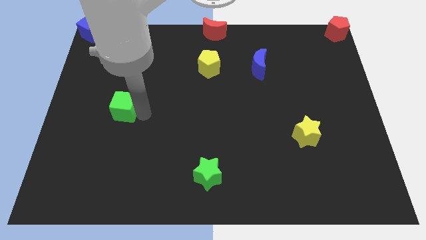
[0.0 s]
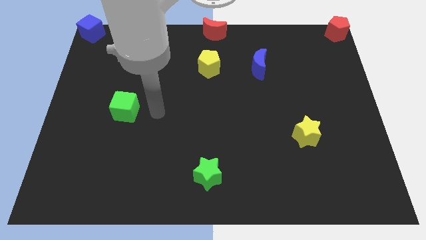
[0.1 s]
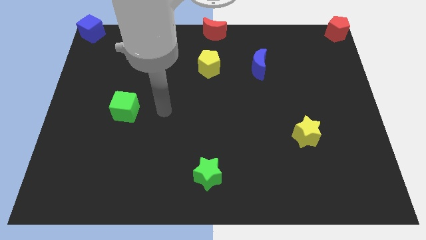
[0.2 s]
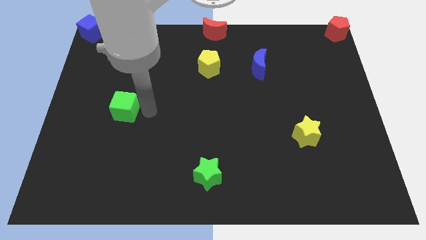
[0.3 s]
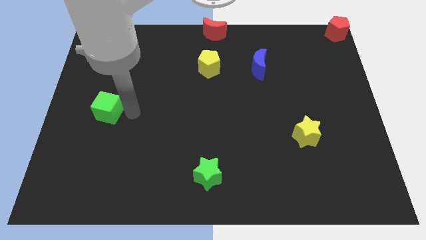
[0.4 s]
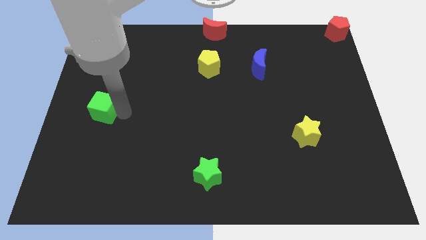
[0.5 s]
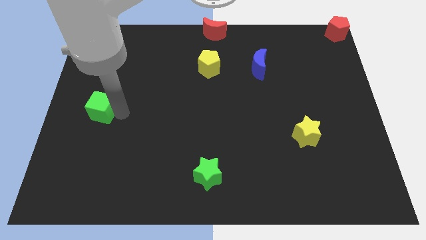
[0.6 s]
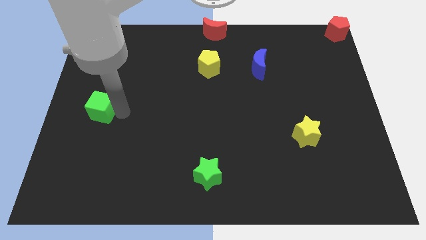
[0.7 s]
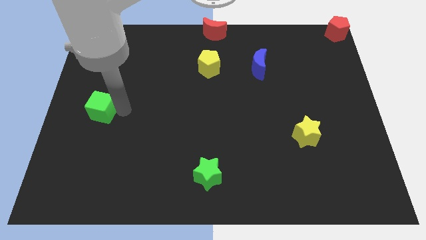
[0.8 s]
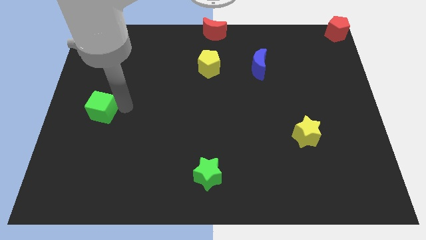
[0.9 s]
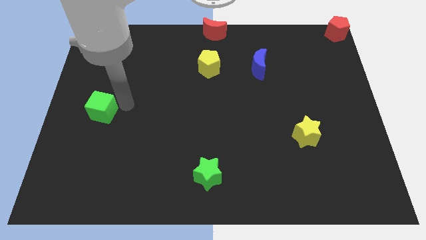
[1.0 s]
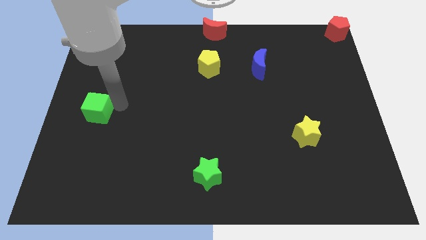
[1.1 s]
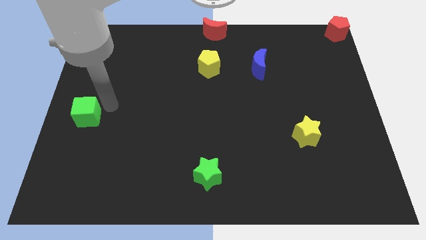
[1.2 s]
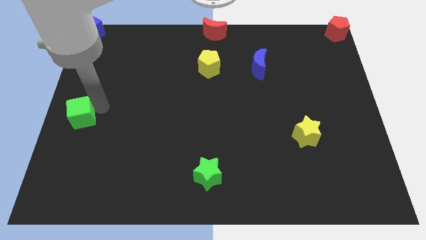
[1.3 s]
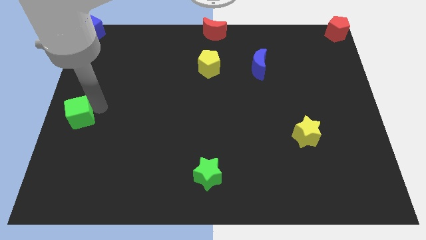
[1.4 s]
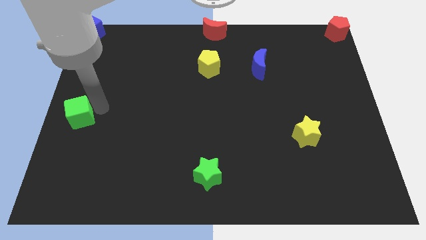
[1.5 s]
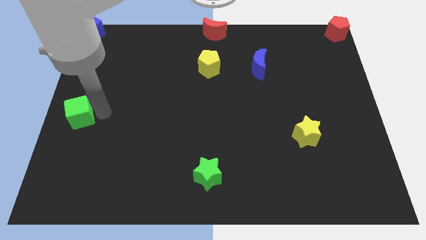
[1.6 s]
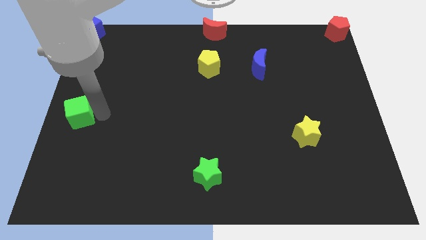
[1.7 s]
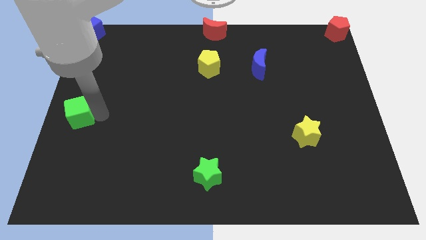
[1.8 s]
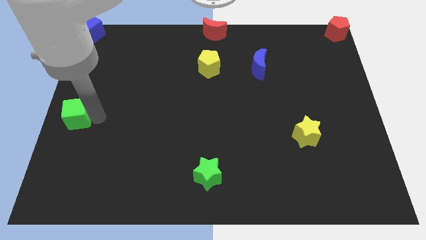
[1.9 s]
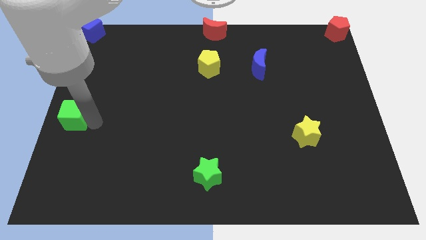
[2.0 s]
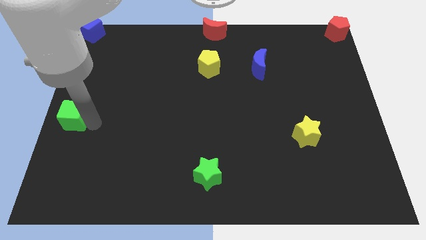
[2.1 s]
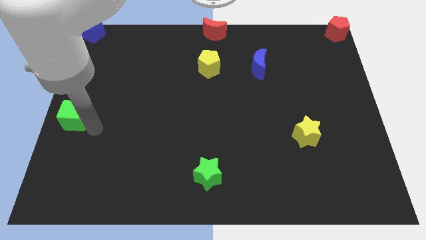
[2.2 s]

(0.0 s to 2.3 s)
move the green cube towards the left center of the board

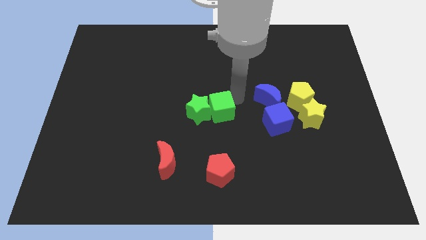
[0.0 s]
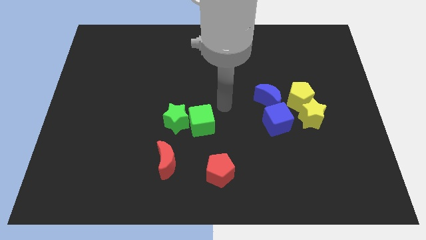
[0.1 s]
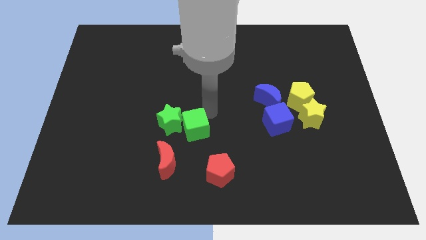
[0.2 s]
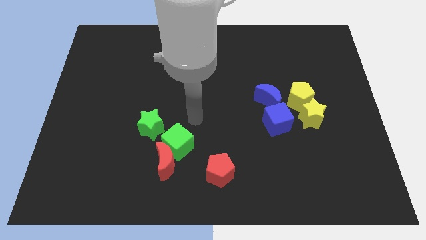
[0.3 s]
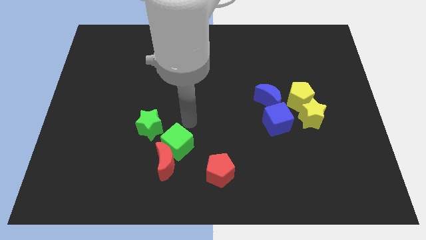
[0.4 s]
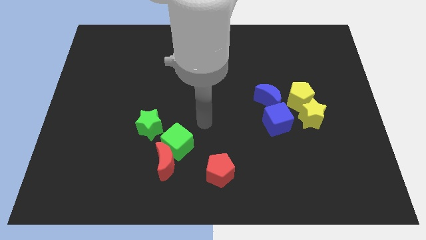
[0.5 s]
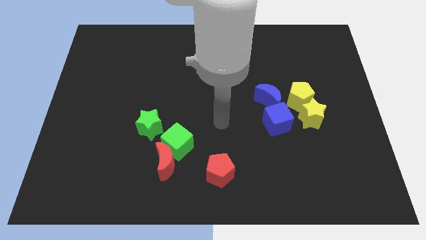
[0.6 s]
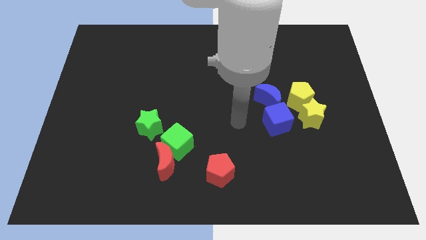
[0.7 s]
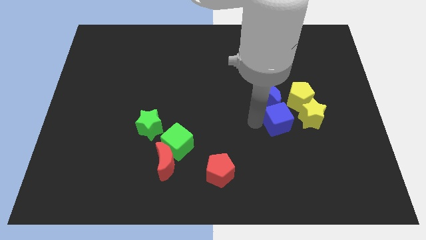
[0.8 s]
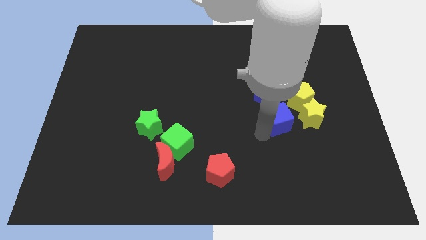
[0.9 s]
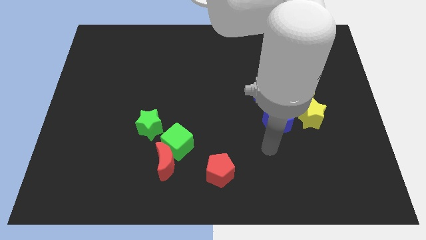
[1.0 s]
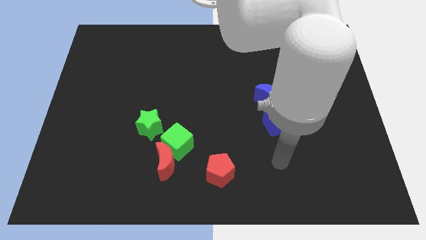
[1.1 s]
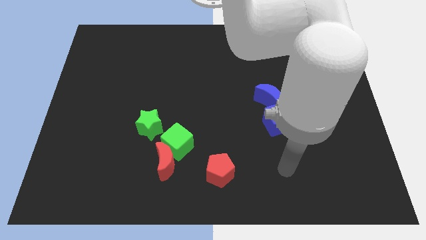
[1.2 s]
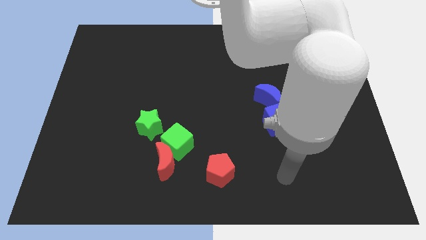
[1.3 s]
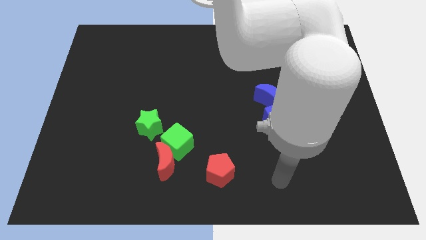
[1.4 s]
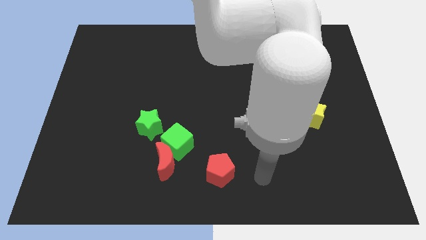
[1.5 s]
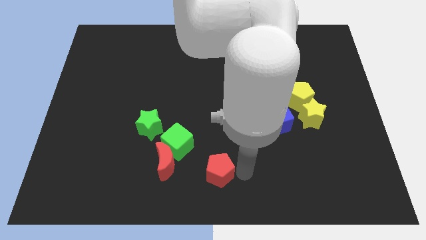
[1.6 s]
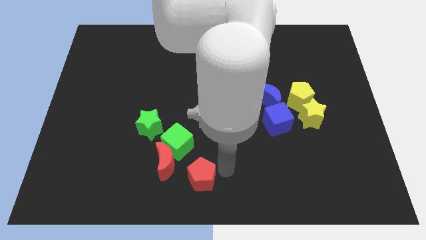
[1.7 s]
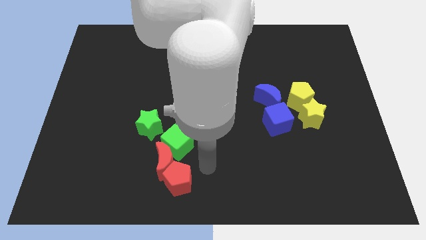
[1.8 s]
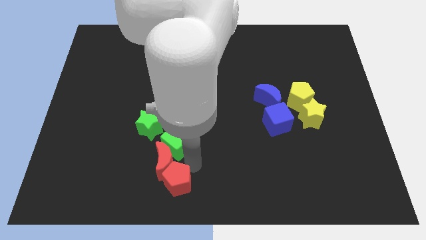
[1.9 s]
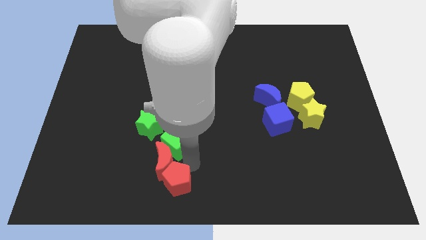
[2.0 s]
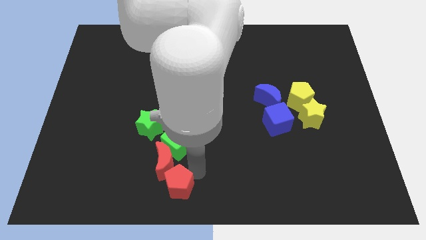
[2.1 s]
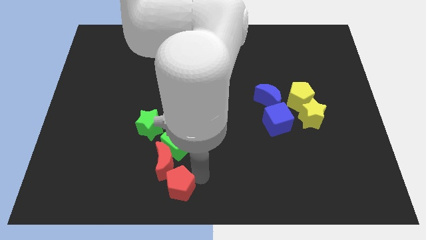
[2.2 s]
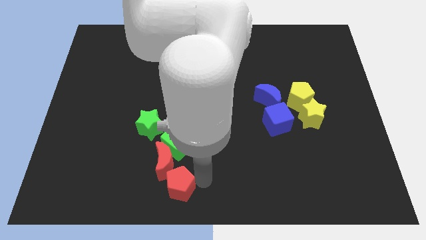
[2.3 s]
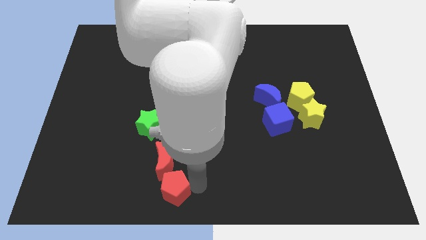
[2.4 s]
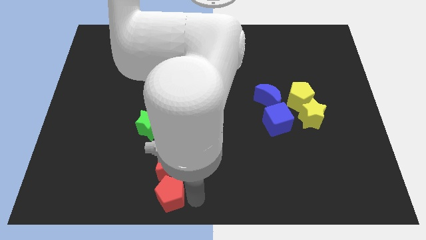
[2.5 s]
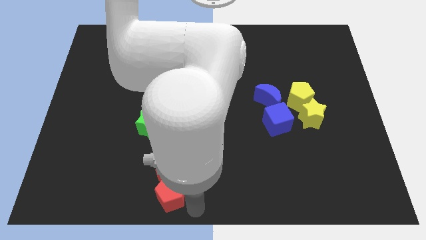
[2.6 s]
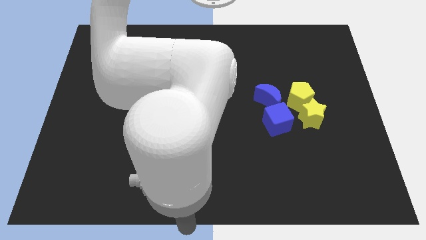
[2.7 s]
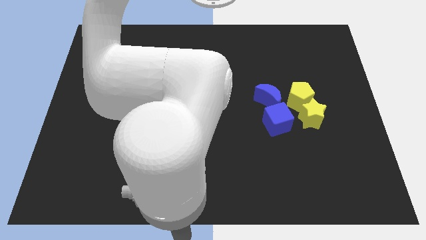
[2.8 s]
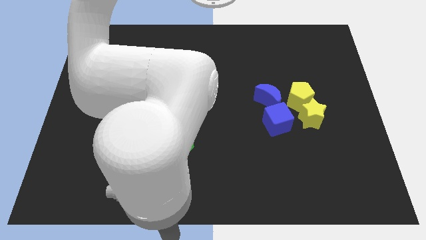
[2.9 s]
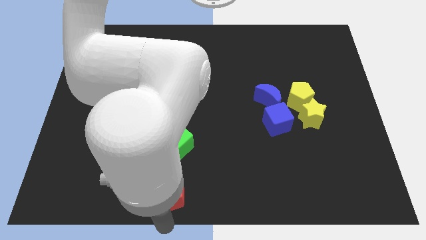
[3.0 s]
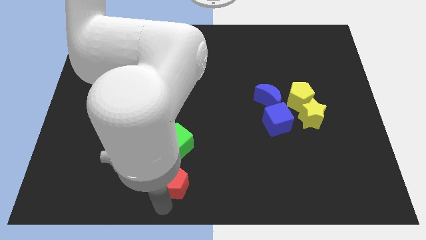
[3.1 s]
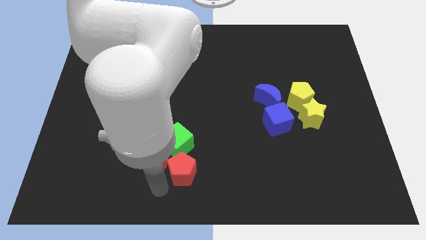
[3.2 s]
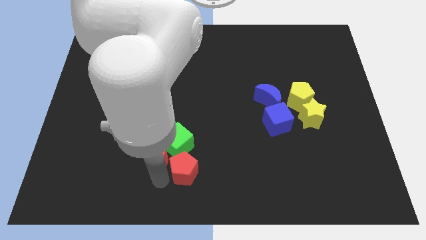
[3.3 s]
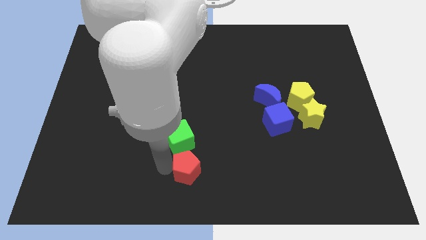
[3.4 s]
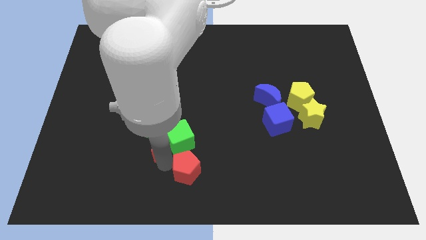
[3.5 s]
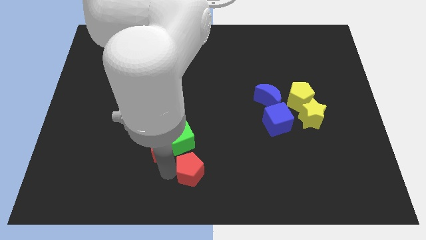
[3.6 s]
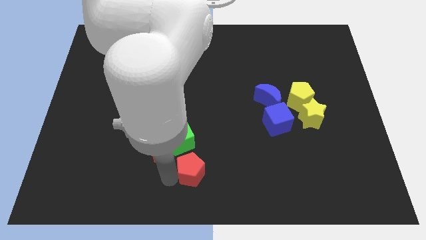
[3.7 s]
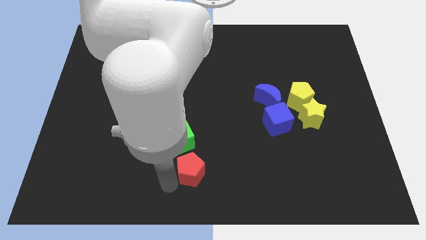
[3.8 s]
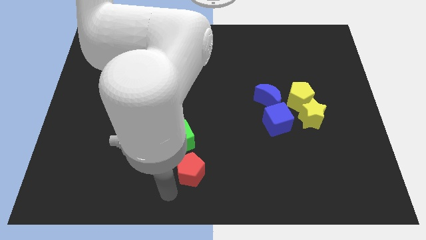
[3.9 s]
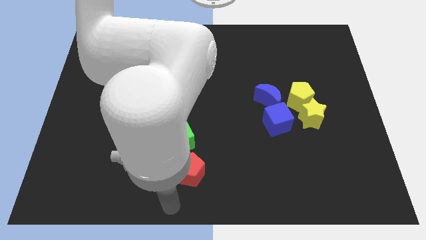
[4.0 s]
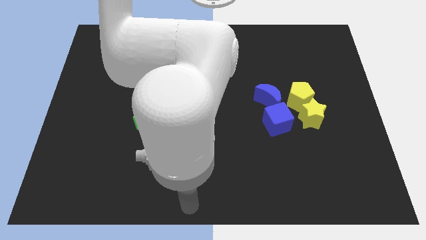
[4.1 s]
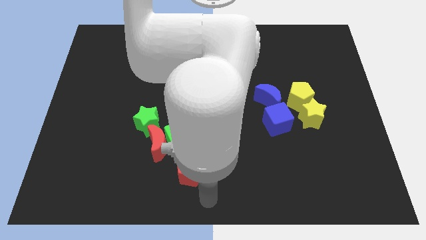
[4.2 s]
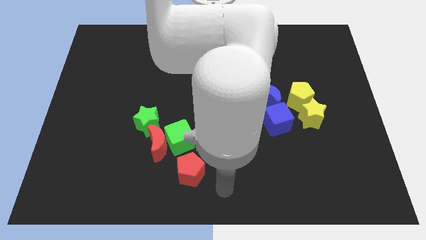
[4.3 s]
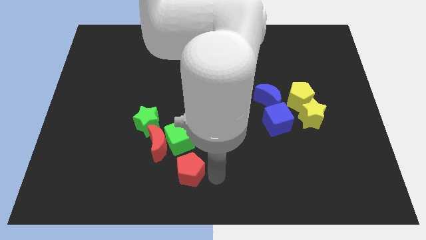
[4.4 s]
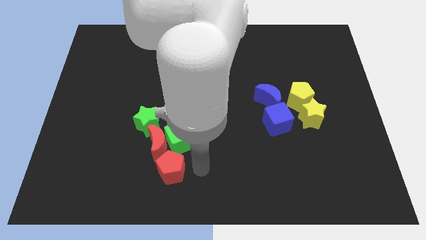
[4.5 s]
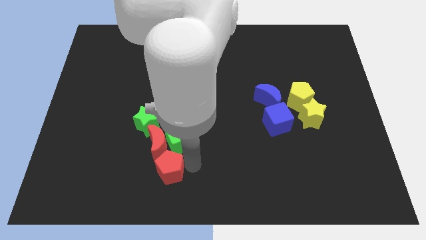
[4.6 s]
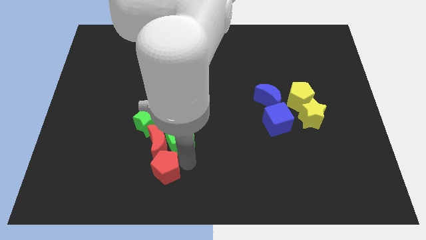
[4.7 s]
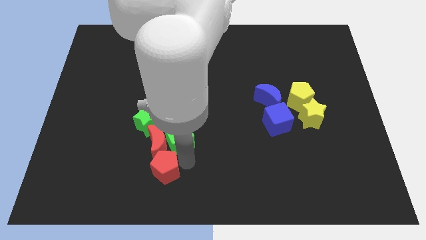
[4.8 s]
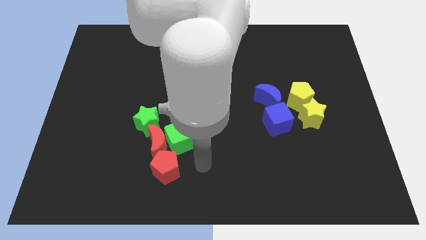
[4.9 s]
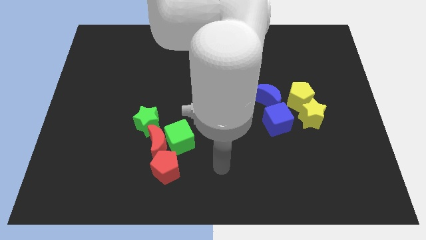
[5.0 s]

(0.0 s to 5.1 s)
make a group out of red blocks and green blocks

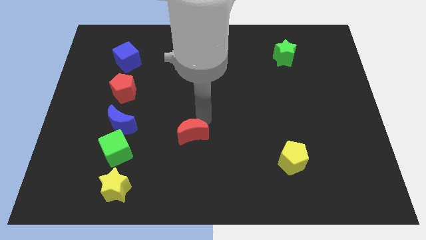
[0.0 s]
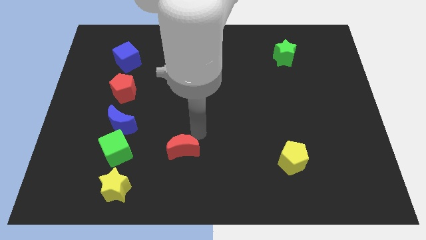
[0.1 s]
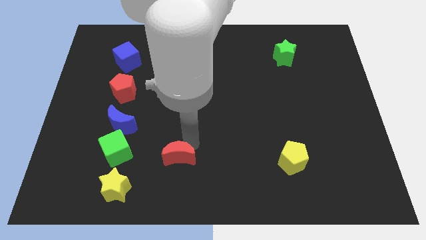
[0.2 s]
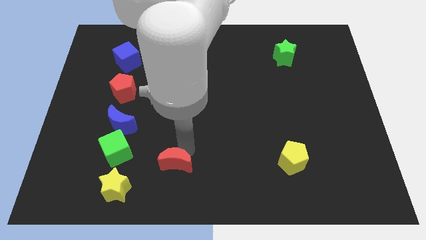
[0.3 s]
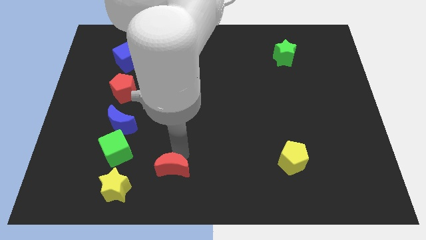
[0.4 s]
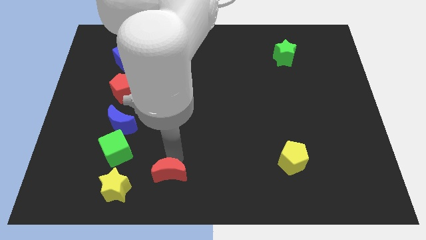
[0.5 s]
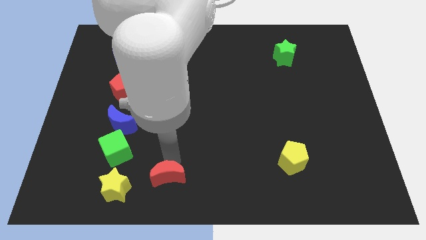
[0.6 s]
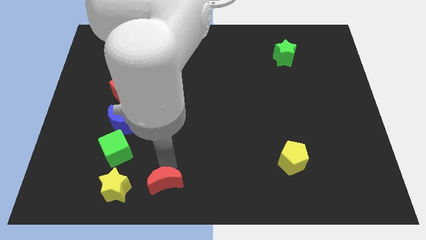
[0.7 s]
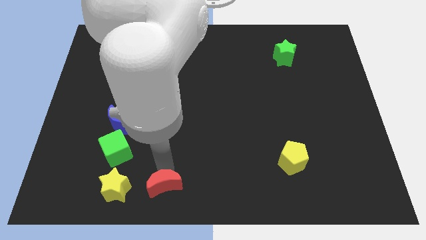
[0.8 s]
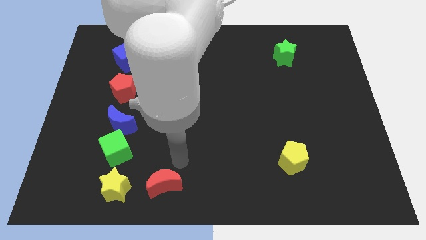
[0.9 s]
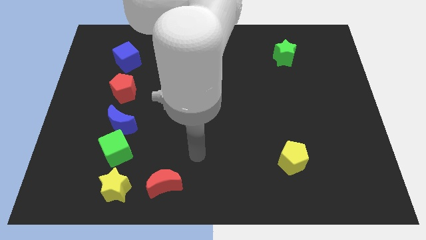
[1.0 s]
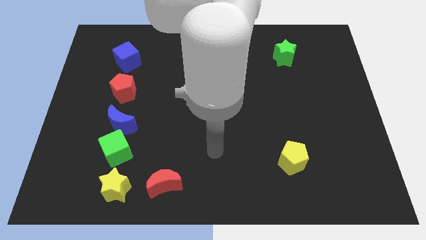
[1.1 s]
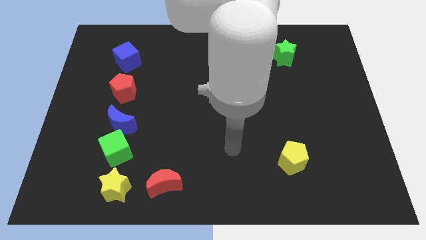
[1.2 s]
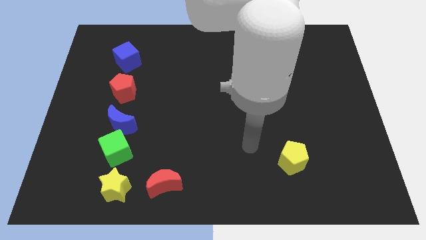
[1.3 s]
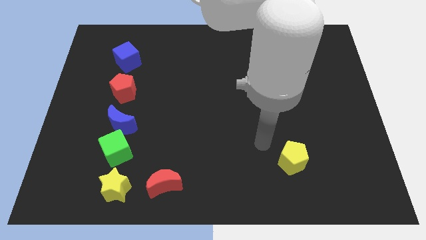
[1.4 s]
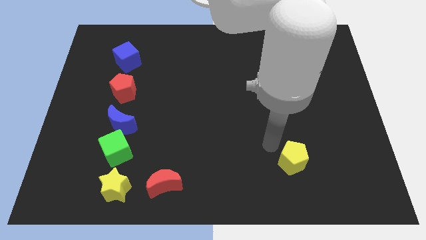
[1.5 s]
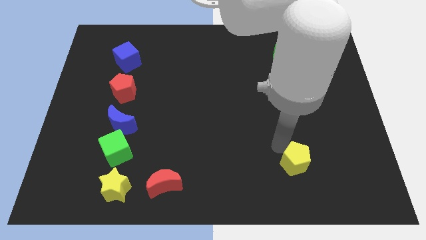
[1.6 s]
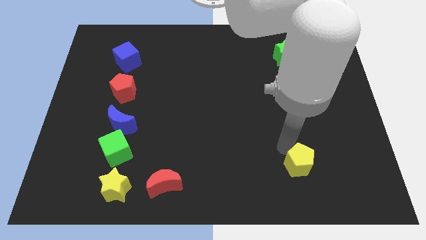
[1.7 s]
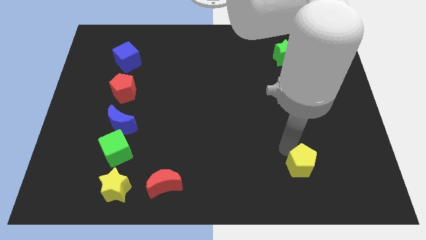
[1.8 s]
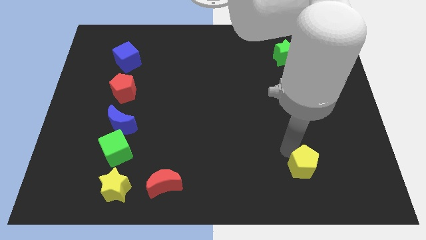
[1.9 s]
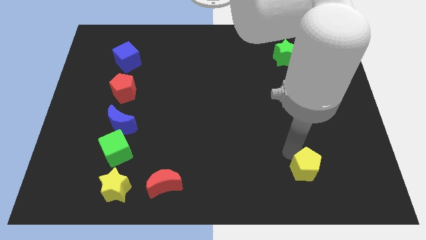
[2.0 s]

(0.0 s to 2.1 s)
place red crescent on the right side of the yellow star
